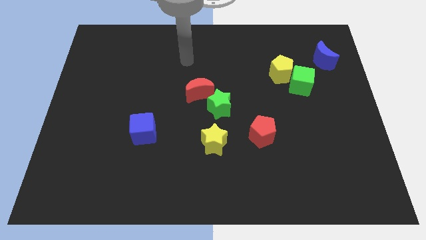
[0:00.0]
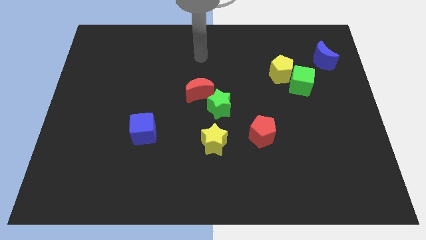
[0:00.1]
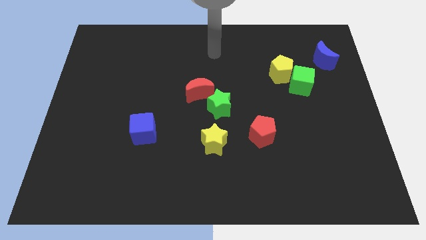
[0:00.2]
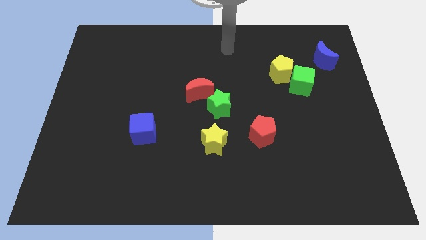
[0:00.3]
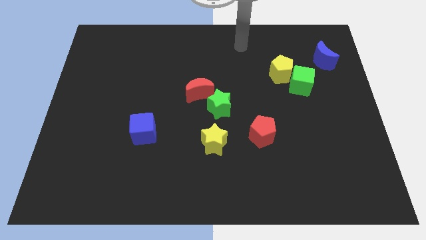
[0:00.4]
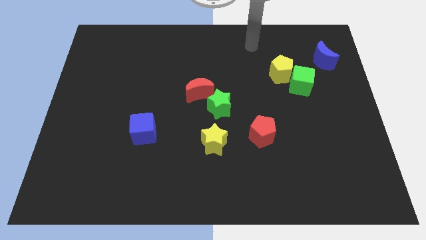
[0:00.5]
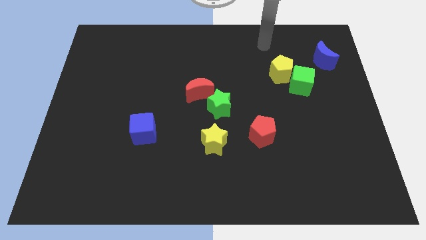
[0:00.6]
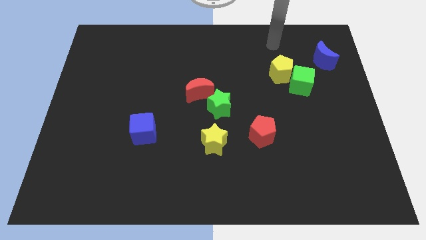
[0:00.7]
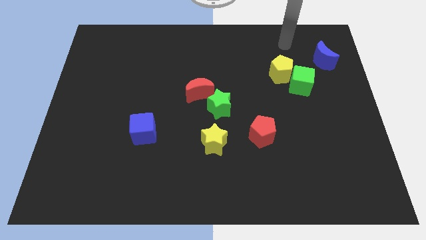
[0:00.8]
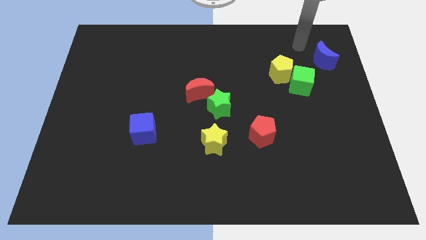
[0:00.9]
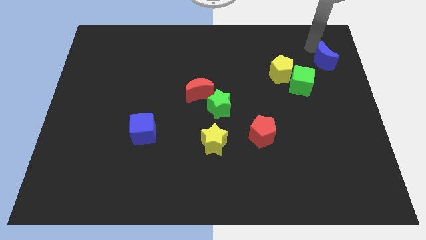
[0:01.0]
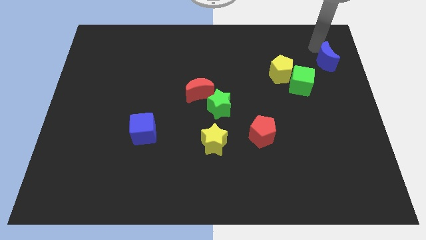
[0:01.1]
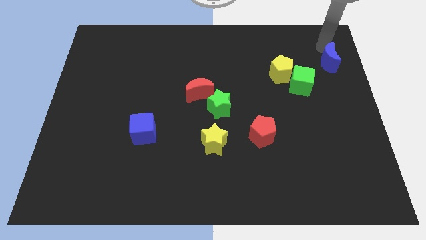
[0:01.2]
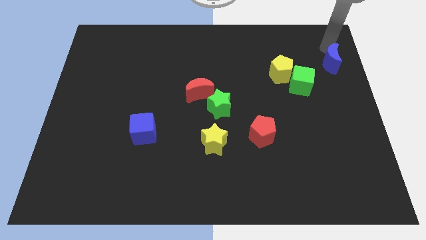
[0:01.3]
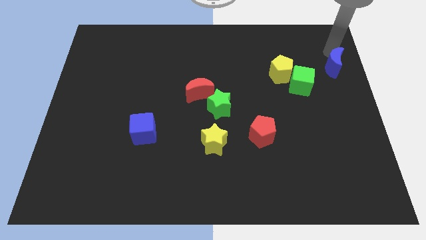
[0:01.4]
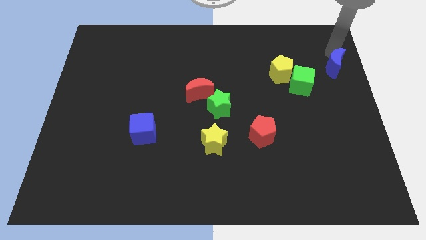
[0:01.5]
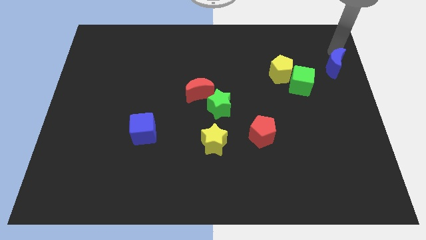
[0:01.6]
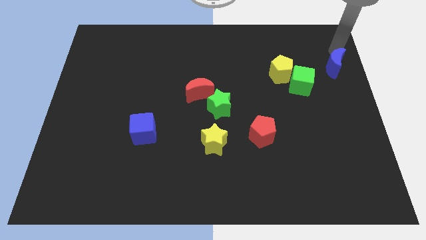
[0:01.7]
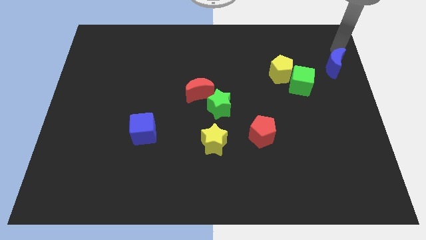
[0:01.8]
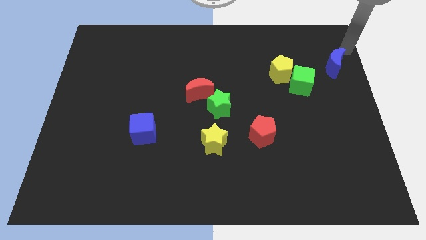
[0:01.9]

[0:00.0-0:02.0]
move the blue moon slightly to the bottom

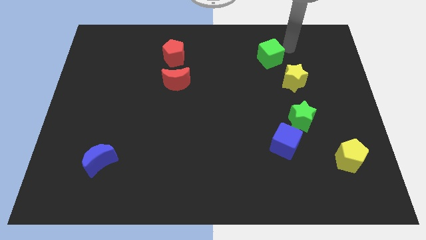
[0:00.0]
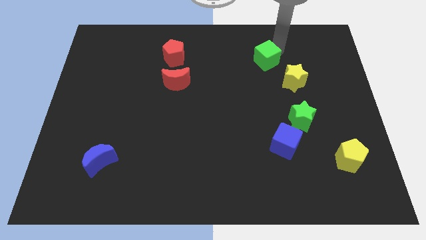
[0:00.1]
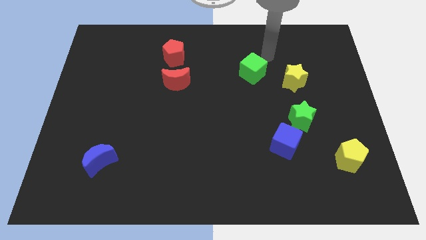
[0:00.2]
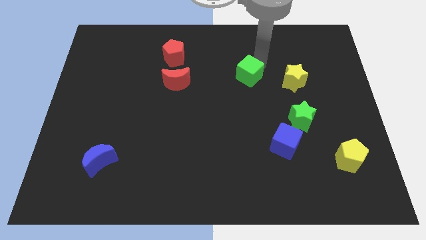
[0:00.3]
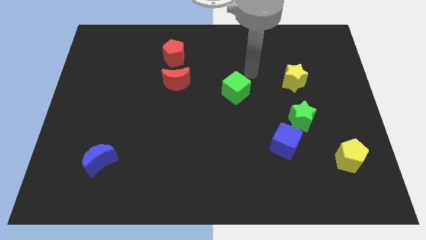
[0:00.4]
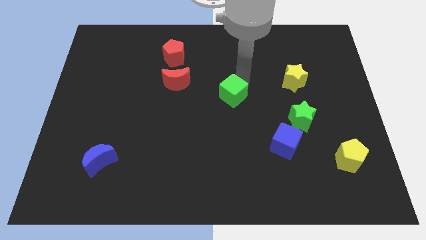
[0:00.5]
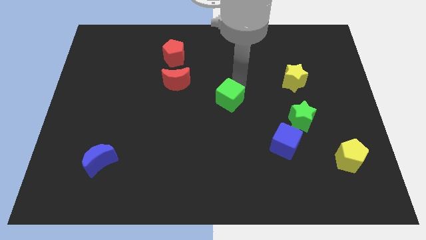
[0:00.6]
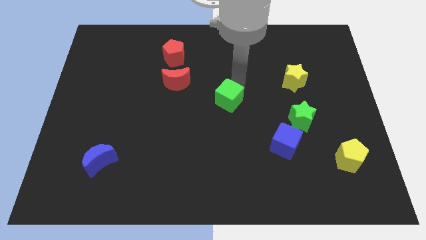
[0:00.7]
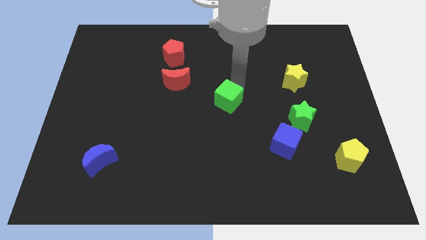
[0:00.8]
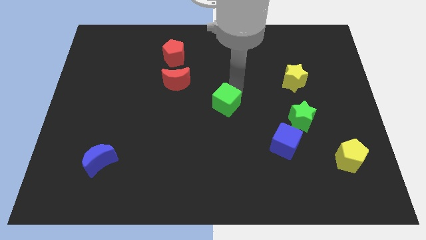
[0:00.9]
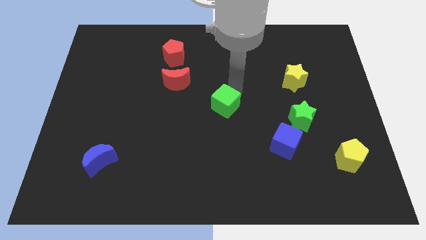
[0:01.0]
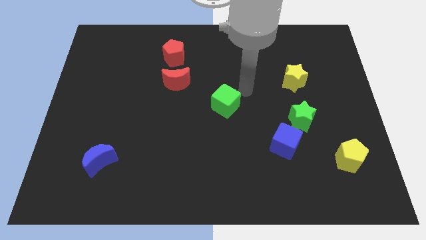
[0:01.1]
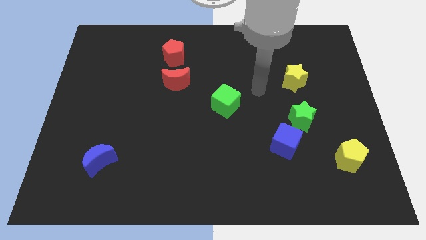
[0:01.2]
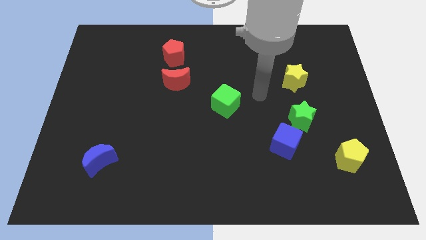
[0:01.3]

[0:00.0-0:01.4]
push green cube downwards to the bottom center of the board

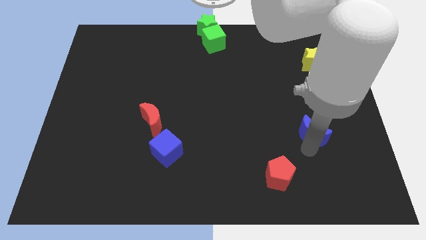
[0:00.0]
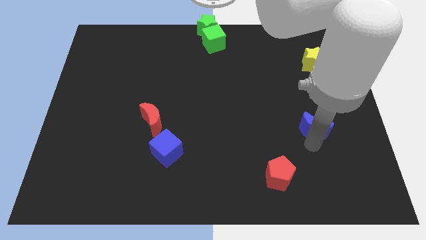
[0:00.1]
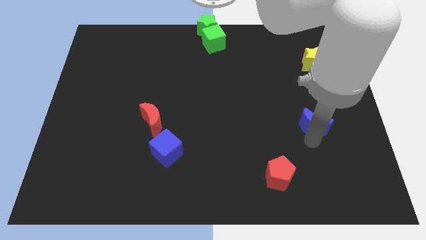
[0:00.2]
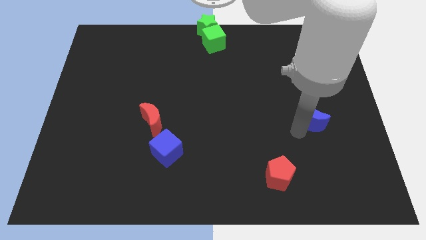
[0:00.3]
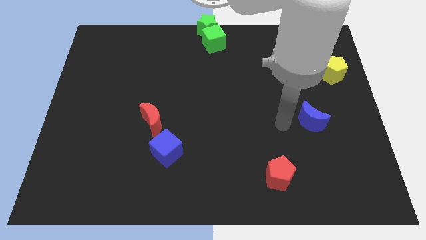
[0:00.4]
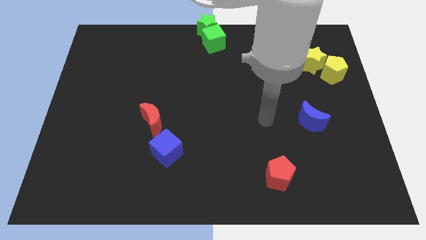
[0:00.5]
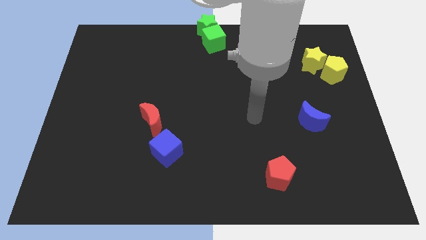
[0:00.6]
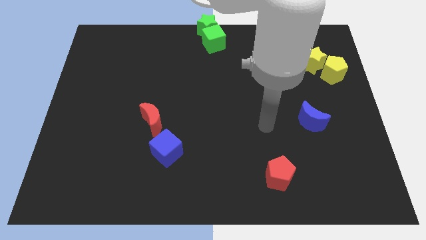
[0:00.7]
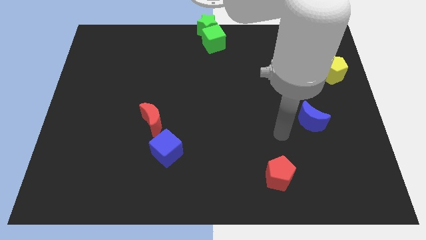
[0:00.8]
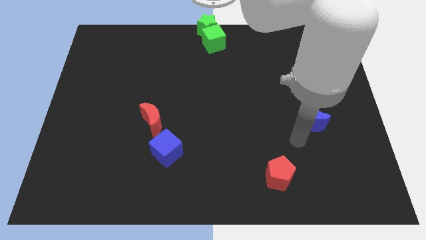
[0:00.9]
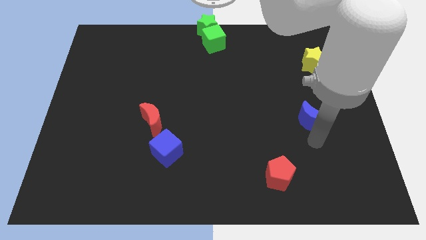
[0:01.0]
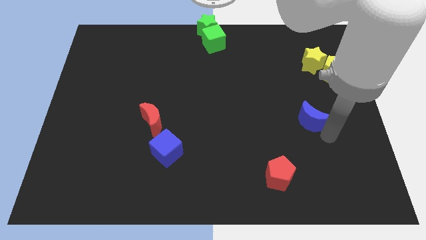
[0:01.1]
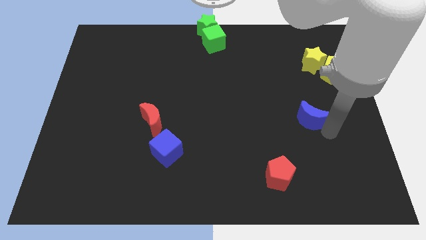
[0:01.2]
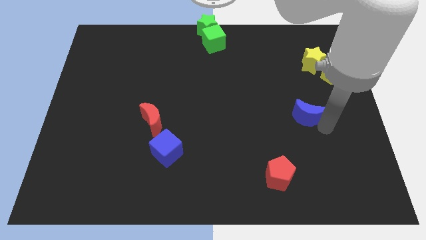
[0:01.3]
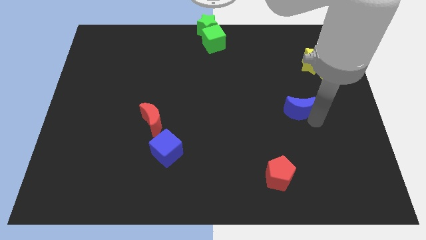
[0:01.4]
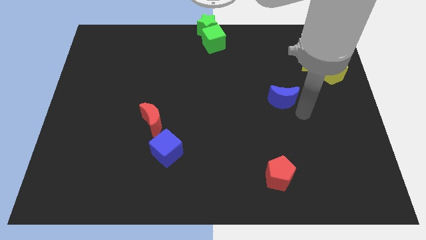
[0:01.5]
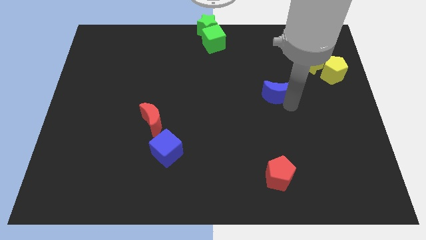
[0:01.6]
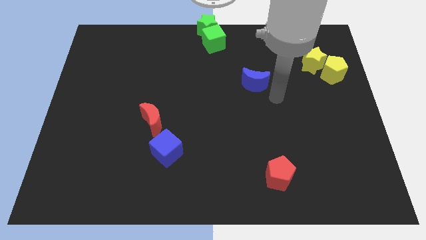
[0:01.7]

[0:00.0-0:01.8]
drag the blue moon above the red pentagon

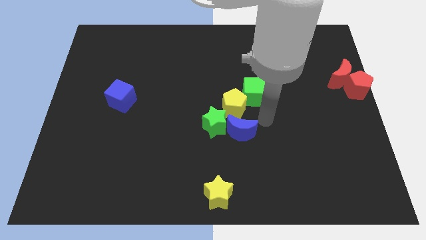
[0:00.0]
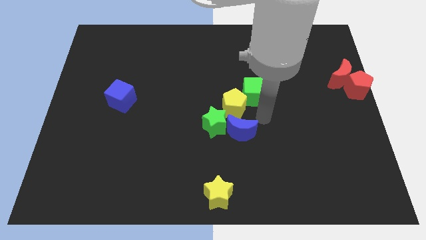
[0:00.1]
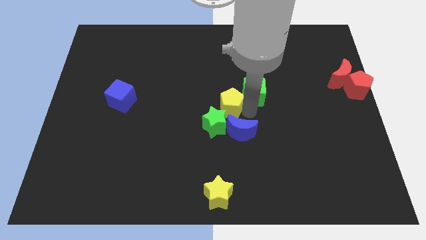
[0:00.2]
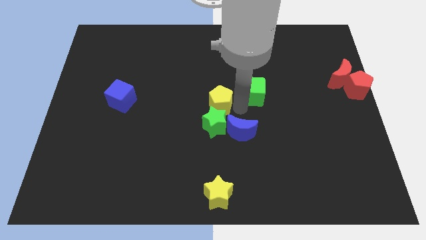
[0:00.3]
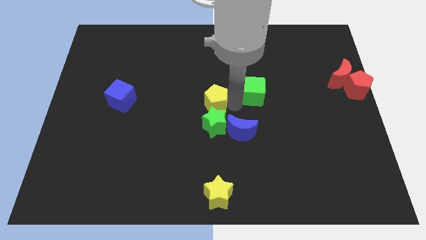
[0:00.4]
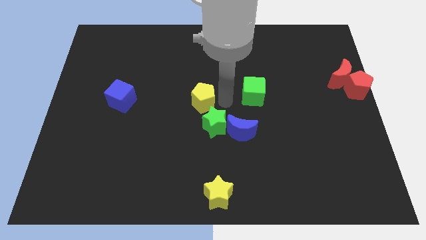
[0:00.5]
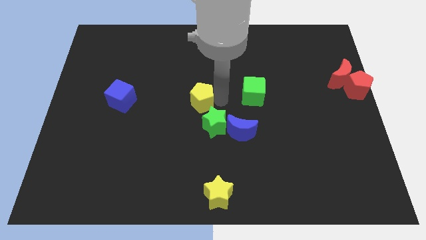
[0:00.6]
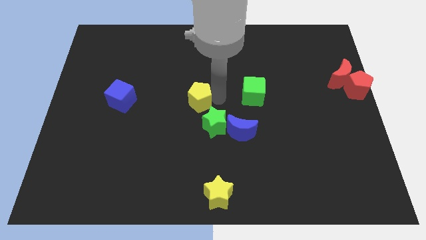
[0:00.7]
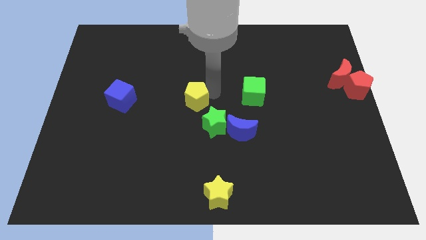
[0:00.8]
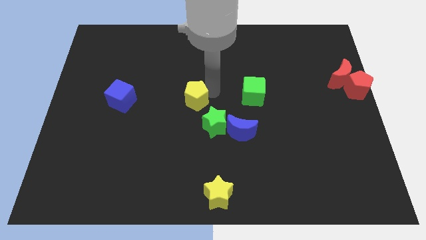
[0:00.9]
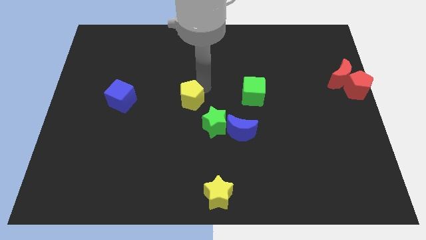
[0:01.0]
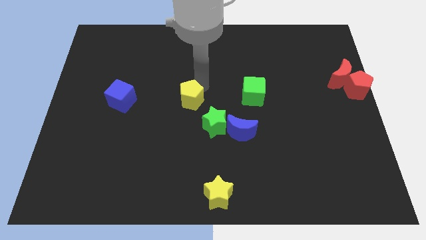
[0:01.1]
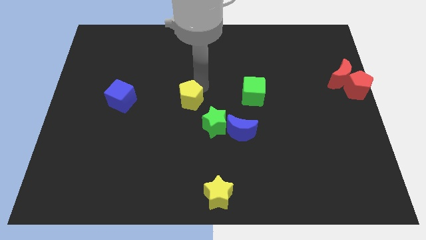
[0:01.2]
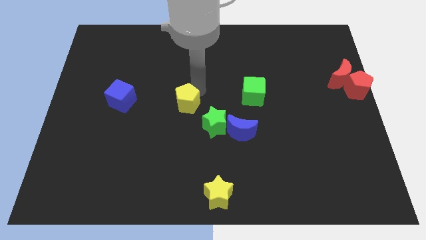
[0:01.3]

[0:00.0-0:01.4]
push the yellow pentagon to the top of the green star

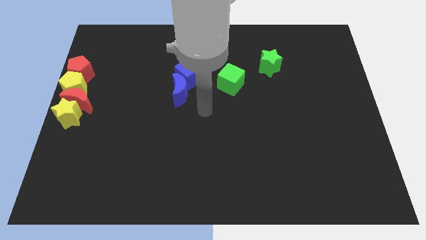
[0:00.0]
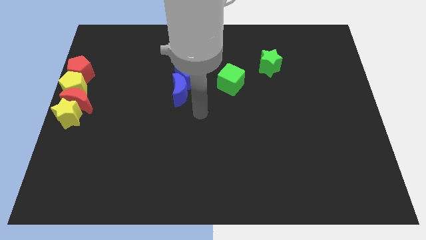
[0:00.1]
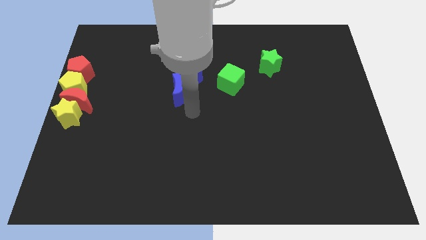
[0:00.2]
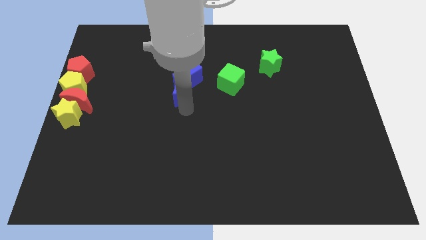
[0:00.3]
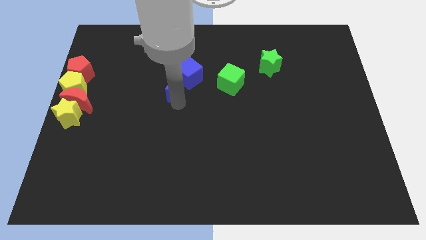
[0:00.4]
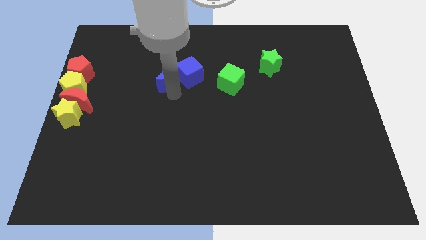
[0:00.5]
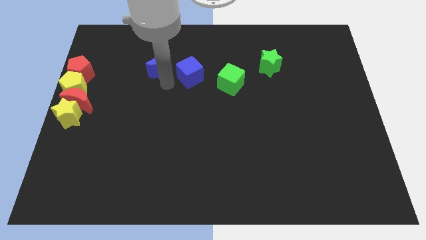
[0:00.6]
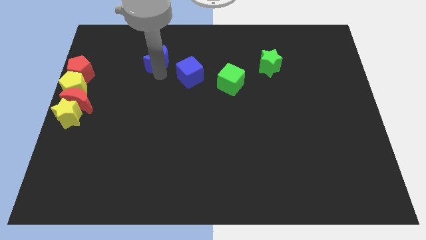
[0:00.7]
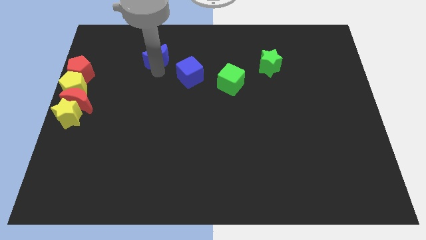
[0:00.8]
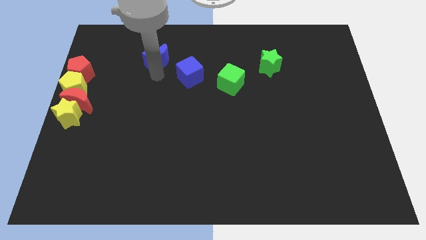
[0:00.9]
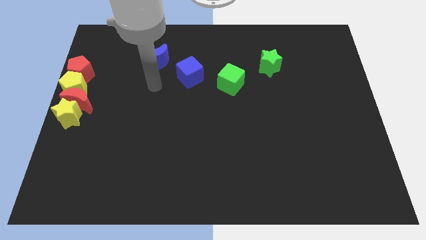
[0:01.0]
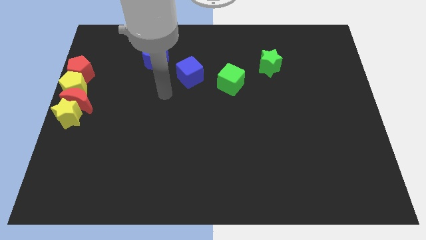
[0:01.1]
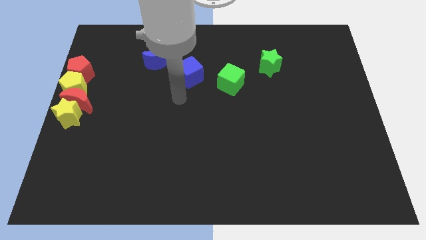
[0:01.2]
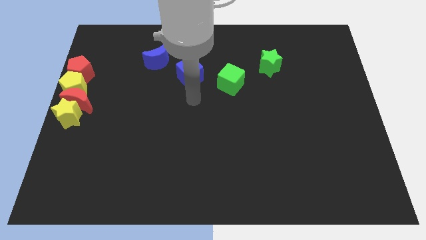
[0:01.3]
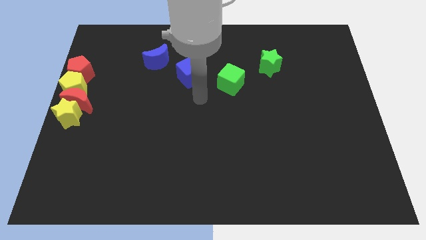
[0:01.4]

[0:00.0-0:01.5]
place the blue crescent to the top left

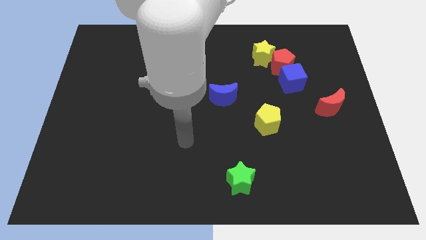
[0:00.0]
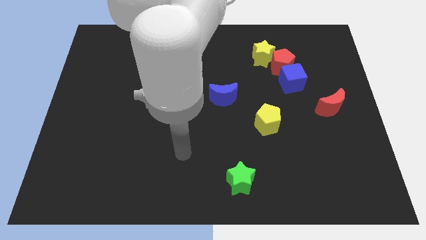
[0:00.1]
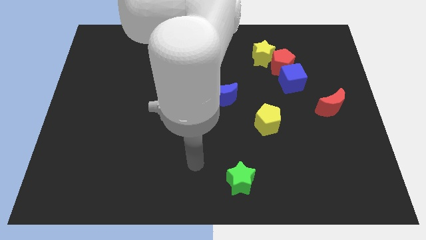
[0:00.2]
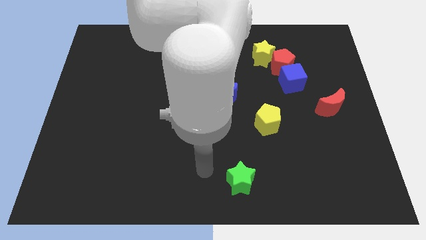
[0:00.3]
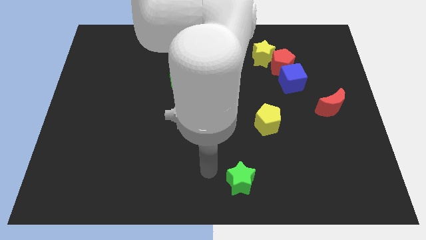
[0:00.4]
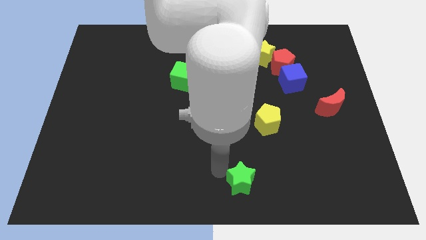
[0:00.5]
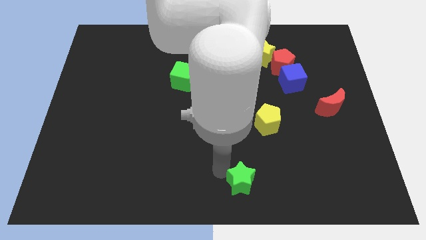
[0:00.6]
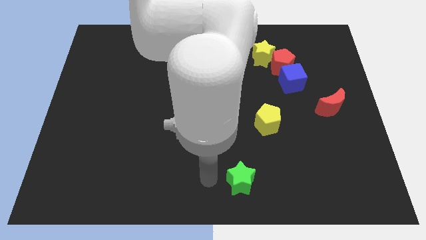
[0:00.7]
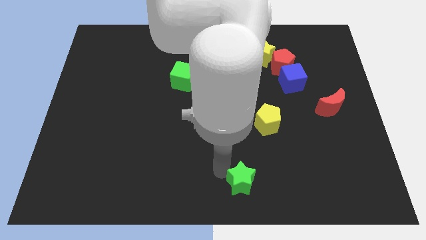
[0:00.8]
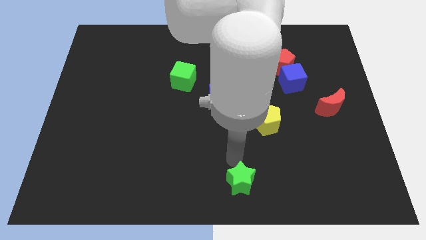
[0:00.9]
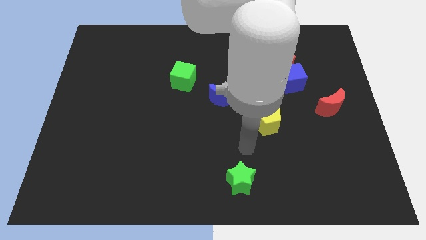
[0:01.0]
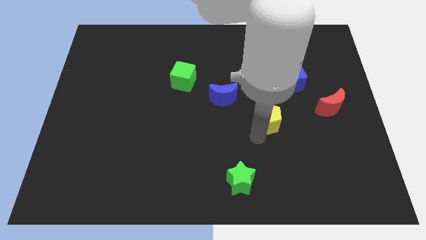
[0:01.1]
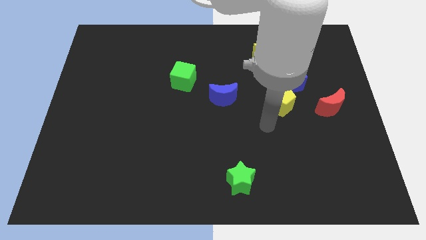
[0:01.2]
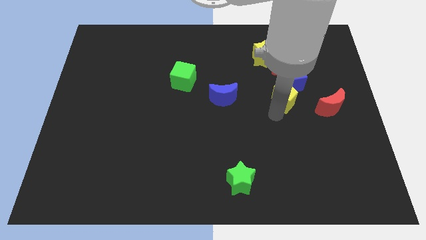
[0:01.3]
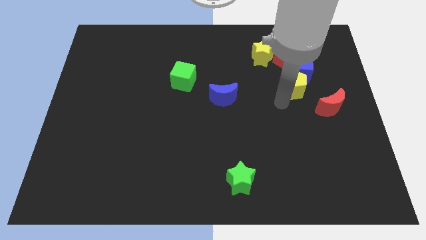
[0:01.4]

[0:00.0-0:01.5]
put the yellow pentagon into the blue cube
